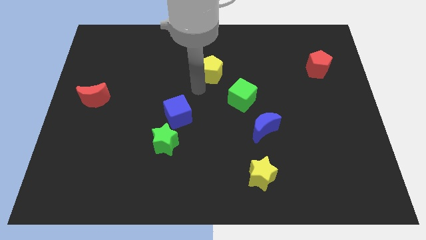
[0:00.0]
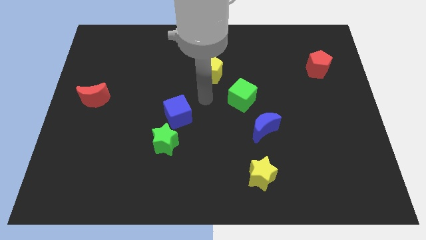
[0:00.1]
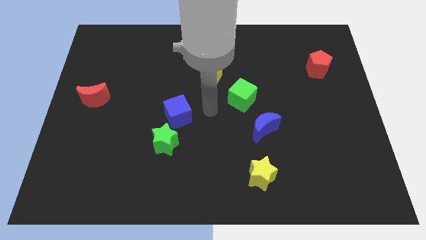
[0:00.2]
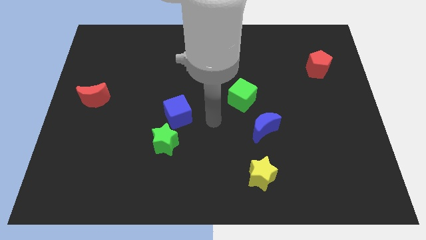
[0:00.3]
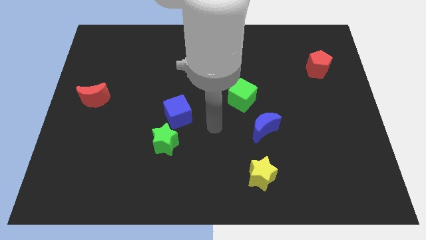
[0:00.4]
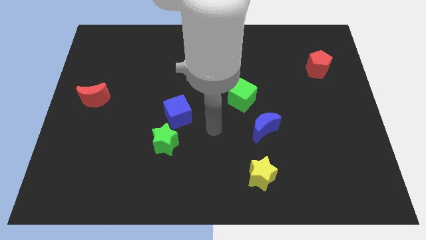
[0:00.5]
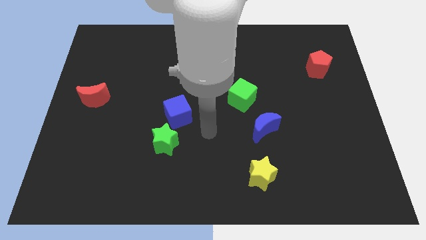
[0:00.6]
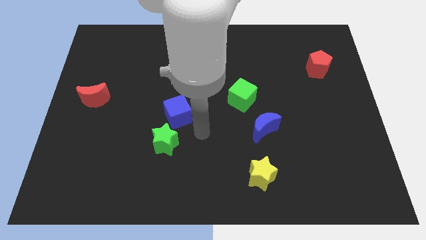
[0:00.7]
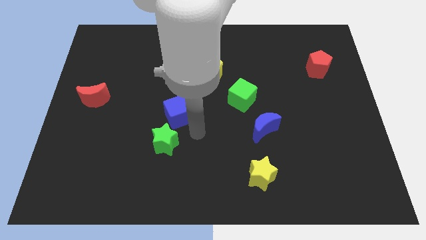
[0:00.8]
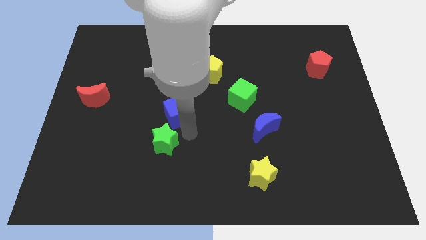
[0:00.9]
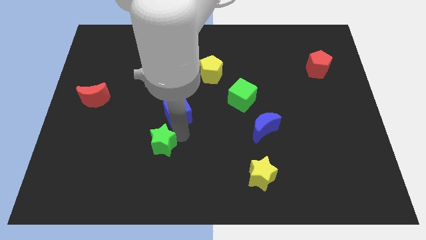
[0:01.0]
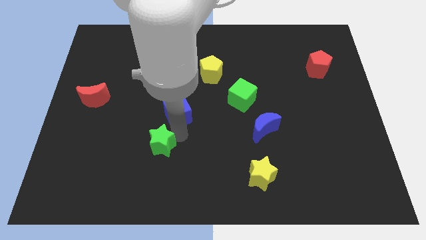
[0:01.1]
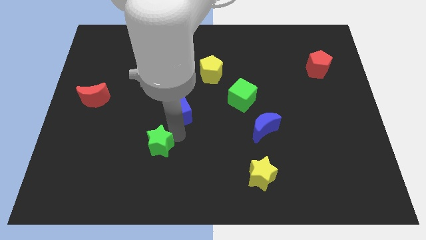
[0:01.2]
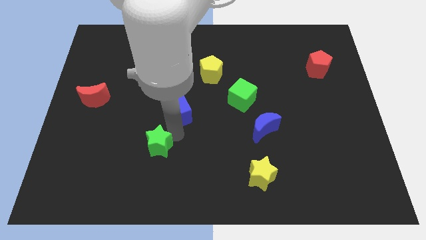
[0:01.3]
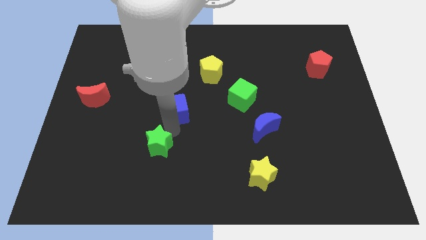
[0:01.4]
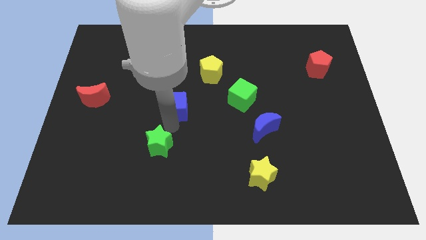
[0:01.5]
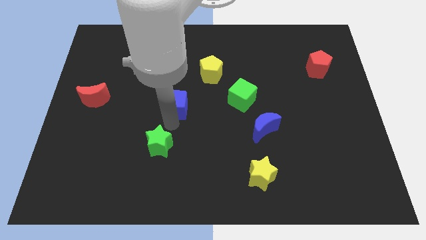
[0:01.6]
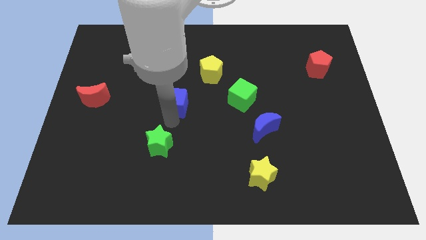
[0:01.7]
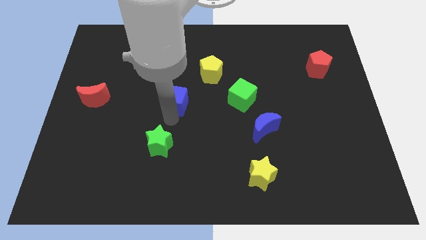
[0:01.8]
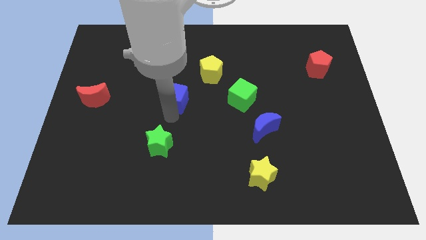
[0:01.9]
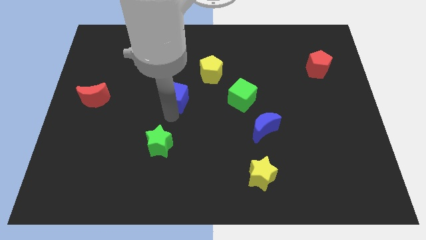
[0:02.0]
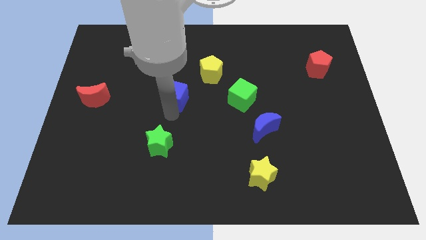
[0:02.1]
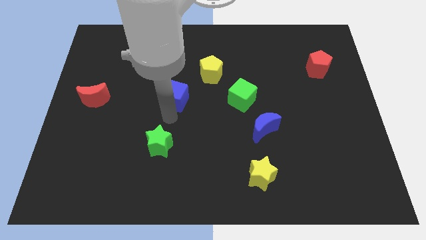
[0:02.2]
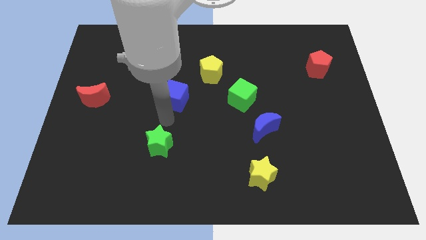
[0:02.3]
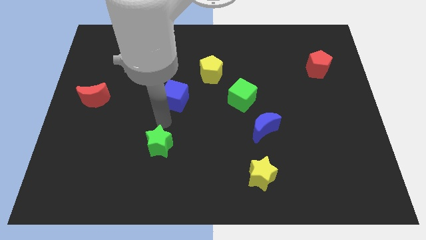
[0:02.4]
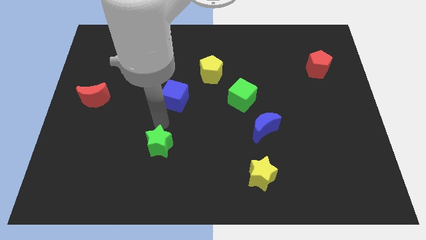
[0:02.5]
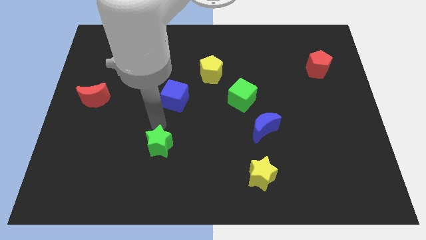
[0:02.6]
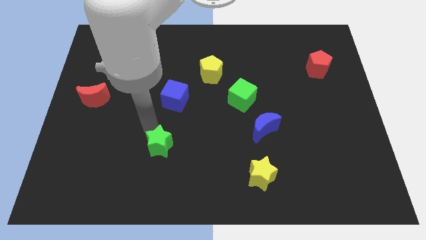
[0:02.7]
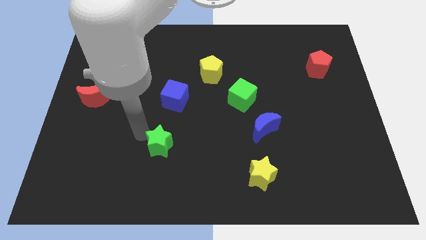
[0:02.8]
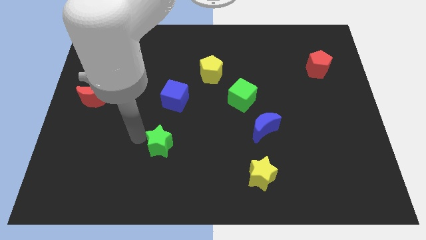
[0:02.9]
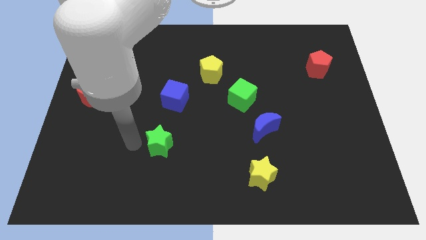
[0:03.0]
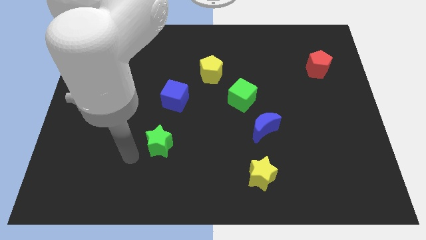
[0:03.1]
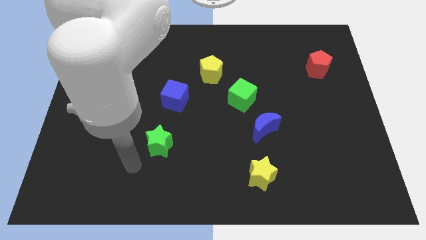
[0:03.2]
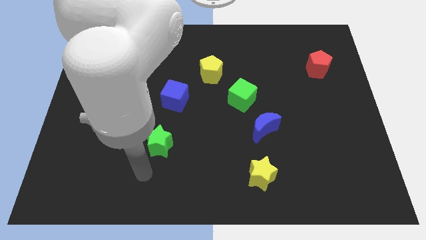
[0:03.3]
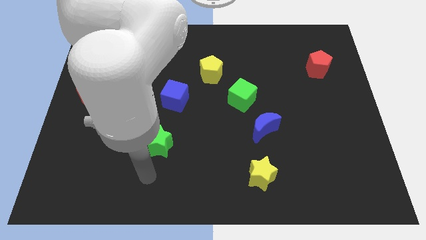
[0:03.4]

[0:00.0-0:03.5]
separate the blue cube and green star

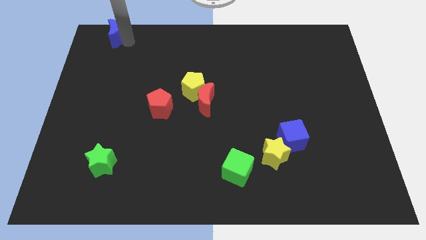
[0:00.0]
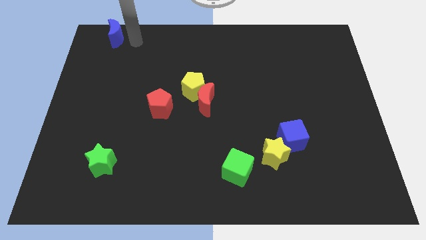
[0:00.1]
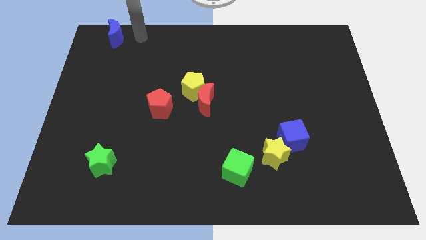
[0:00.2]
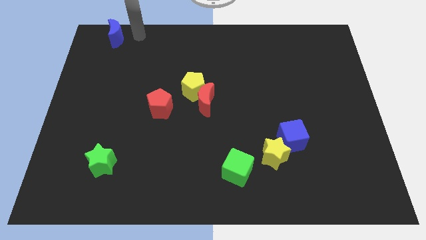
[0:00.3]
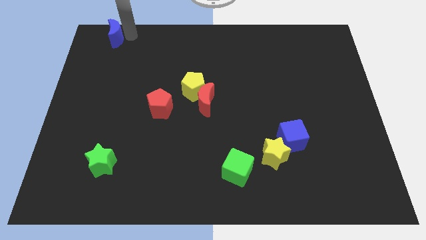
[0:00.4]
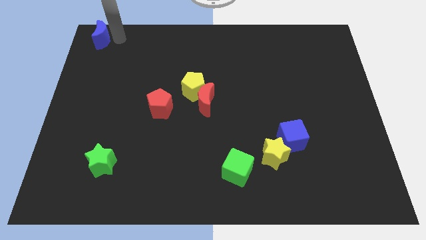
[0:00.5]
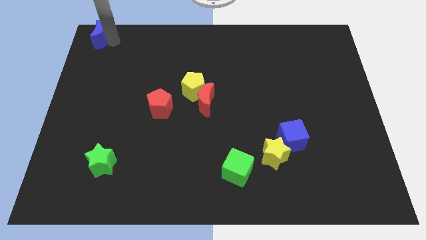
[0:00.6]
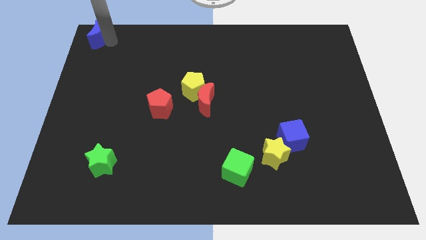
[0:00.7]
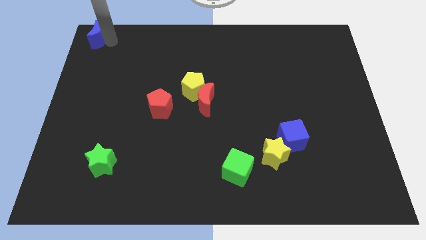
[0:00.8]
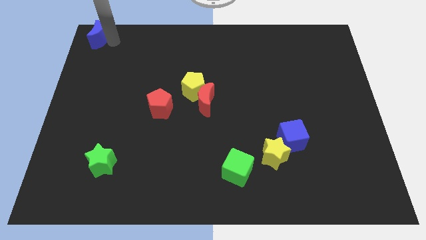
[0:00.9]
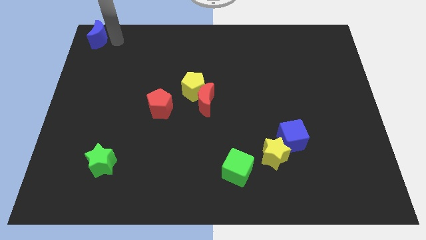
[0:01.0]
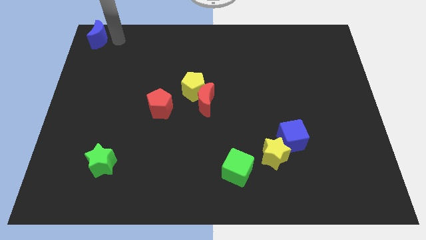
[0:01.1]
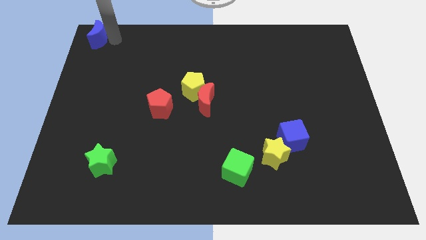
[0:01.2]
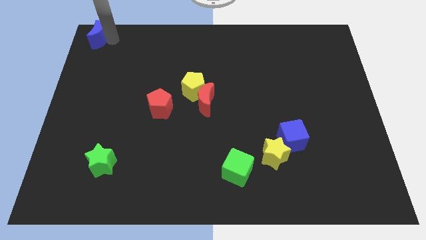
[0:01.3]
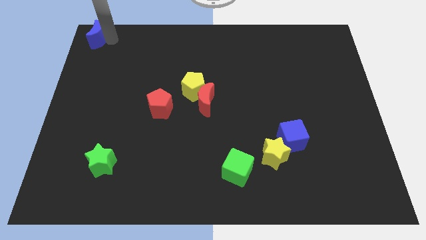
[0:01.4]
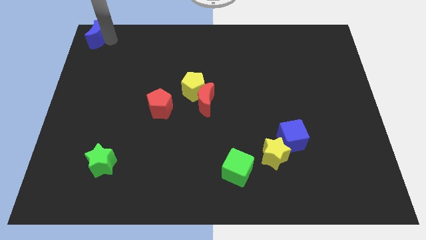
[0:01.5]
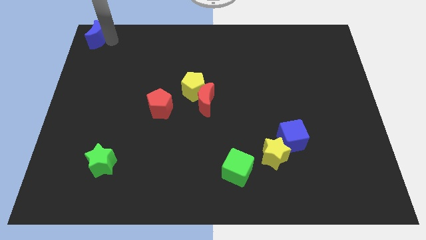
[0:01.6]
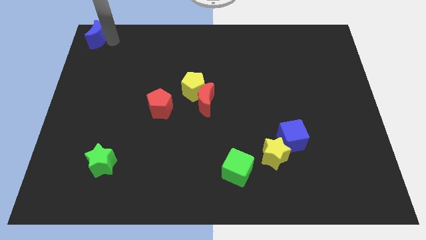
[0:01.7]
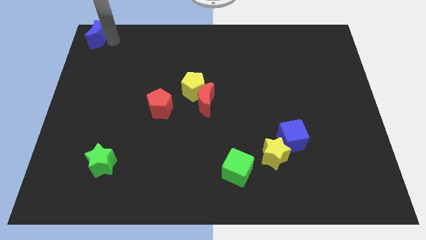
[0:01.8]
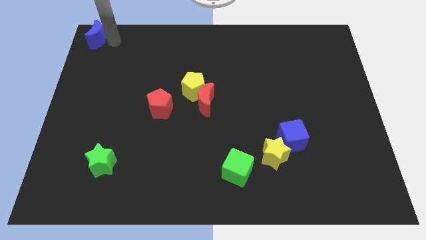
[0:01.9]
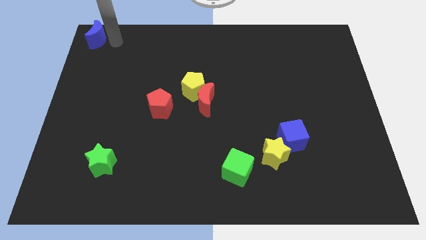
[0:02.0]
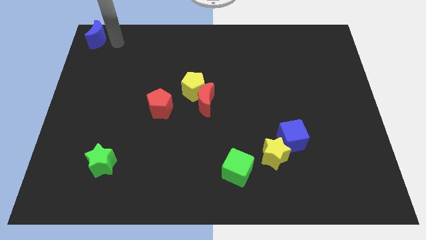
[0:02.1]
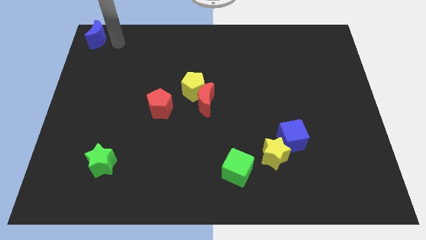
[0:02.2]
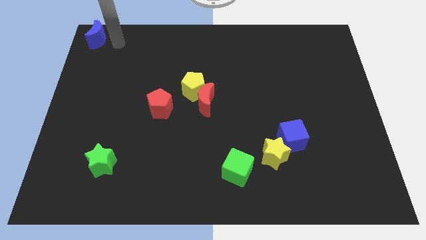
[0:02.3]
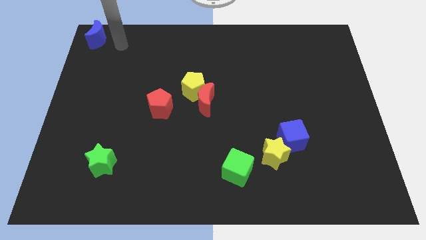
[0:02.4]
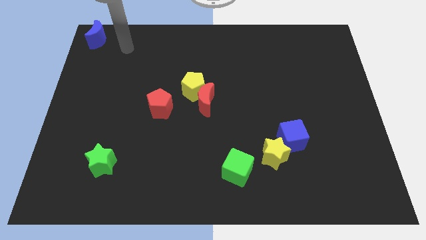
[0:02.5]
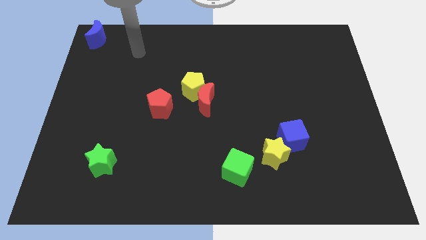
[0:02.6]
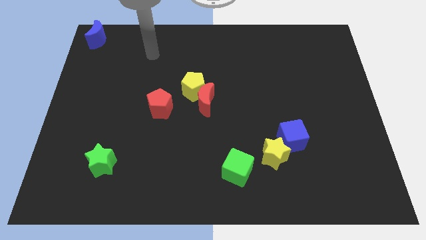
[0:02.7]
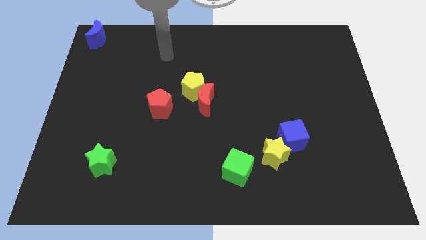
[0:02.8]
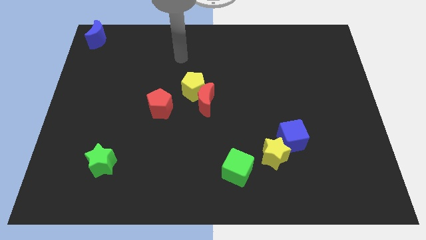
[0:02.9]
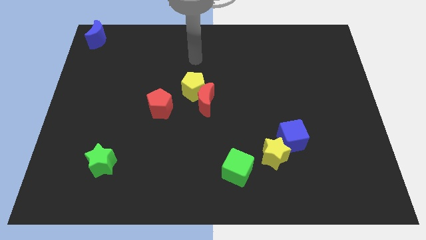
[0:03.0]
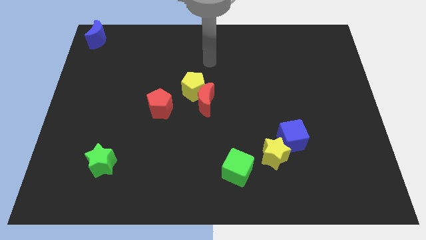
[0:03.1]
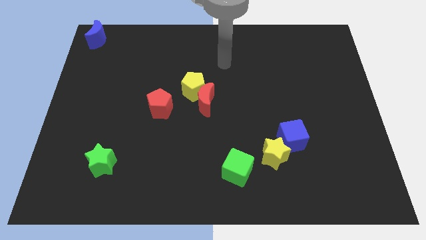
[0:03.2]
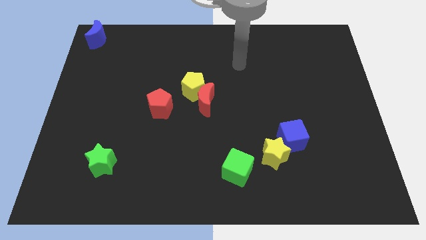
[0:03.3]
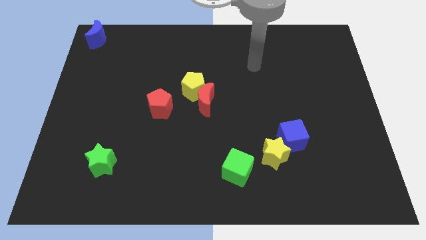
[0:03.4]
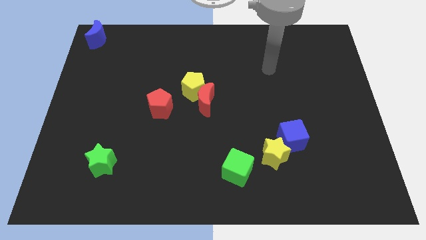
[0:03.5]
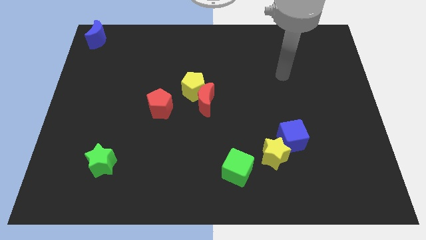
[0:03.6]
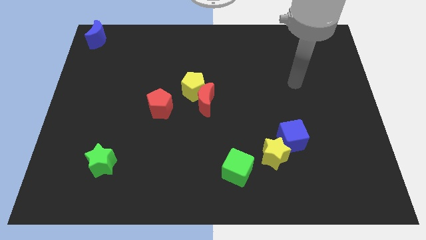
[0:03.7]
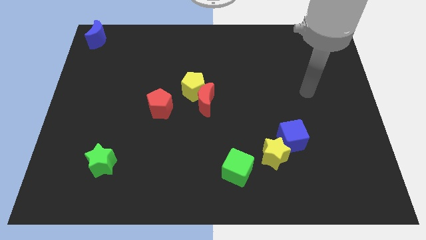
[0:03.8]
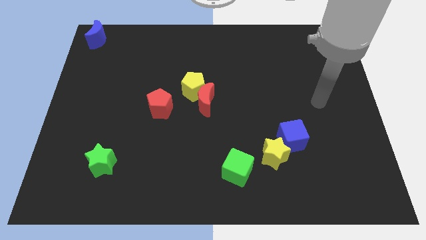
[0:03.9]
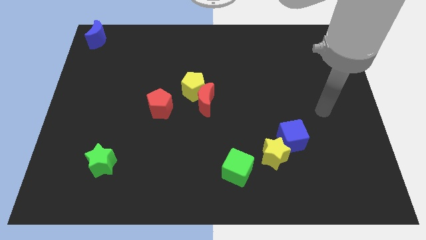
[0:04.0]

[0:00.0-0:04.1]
put the blue crescent on the top left of the board

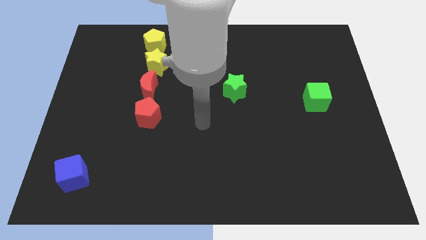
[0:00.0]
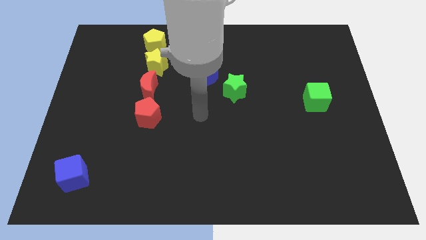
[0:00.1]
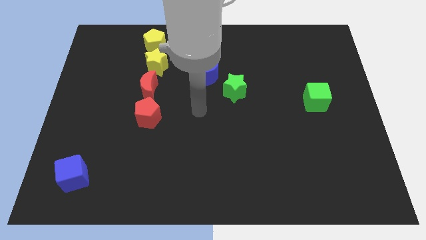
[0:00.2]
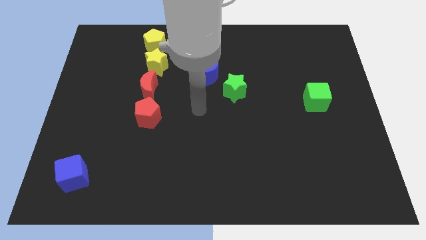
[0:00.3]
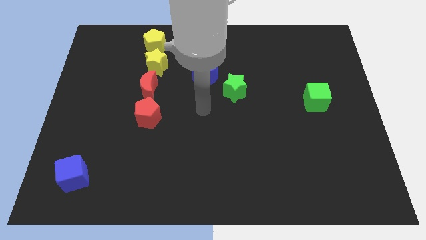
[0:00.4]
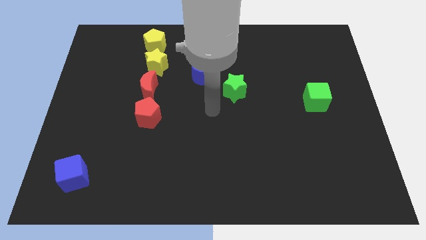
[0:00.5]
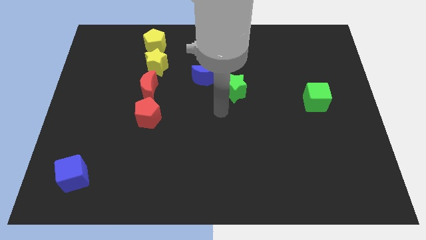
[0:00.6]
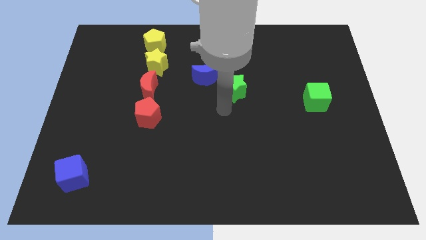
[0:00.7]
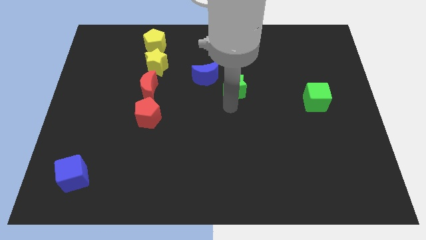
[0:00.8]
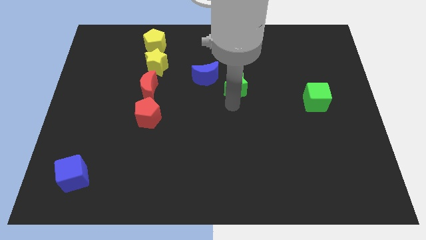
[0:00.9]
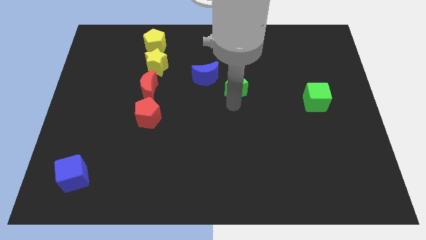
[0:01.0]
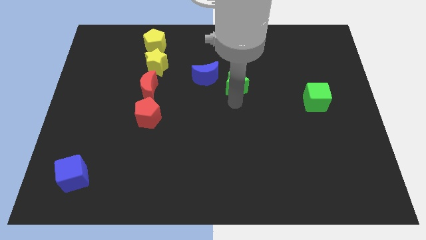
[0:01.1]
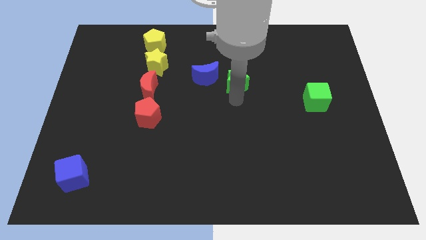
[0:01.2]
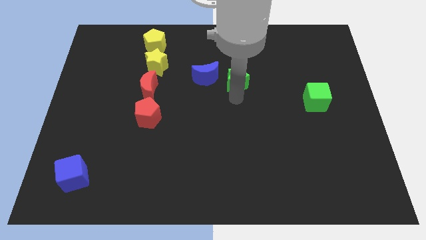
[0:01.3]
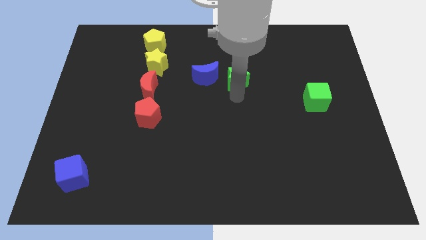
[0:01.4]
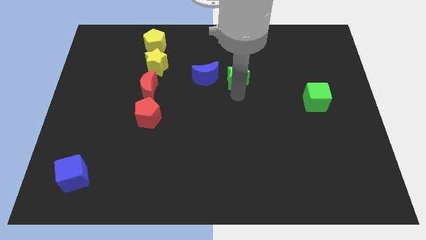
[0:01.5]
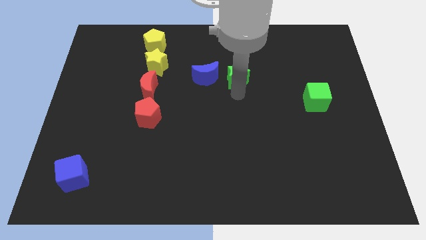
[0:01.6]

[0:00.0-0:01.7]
push the green star slightly upward
